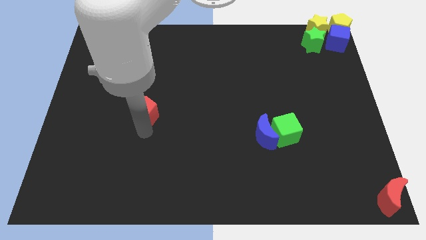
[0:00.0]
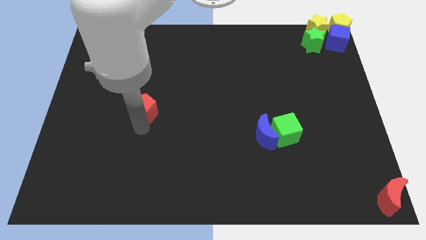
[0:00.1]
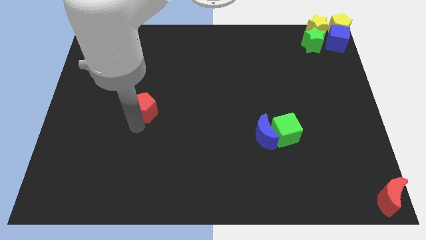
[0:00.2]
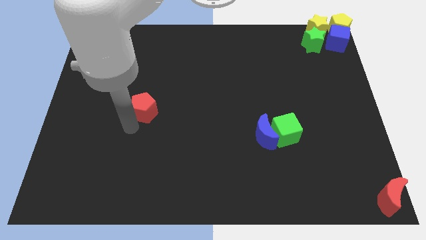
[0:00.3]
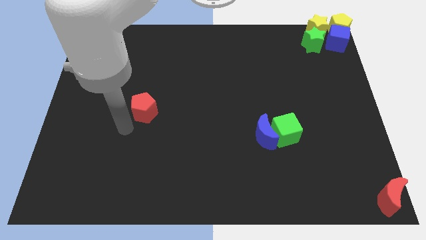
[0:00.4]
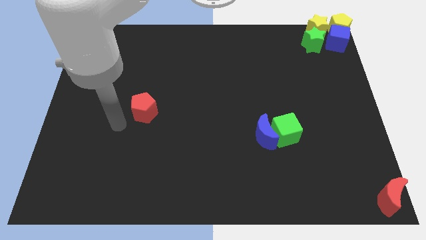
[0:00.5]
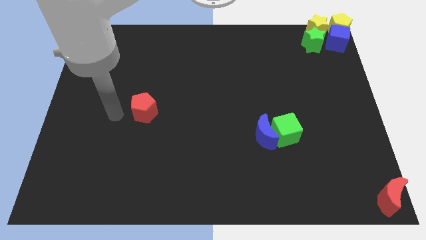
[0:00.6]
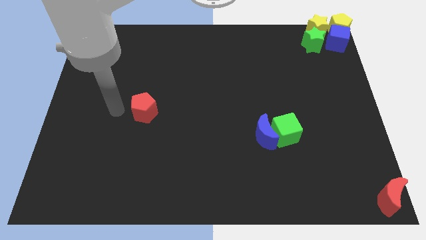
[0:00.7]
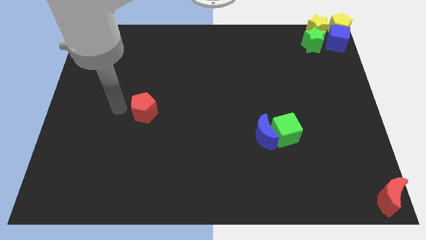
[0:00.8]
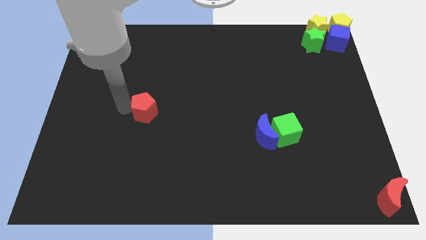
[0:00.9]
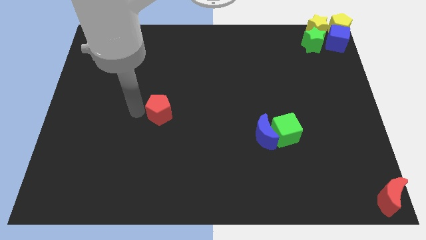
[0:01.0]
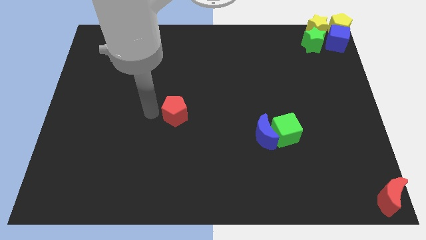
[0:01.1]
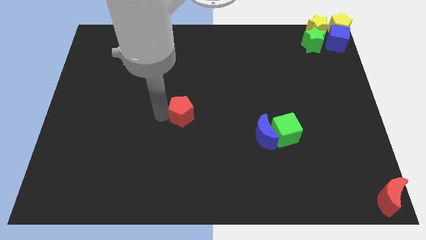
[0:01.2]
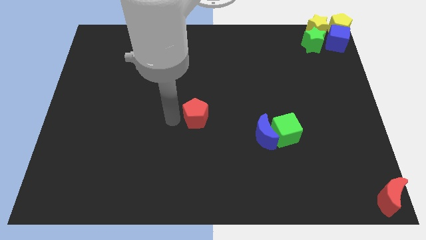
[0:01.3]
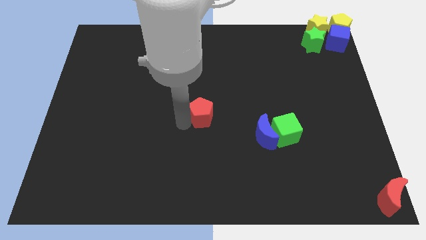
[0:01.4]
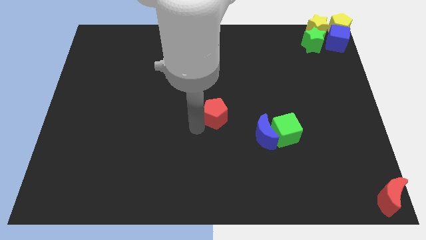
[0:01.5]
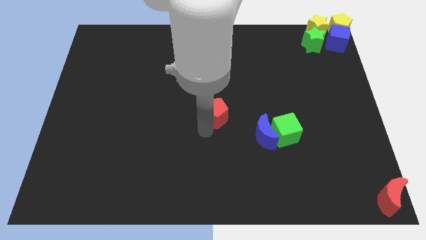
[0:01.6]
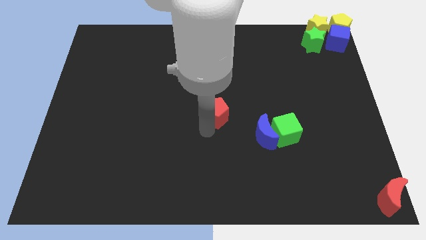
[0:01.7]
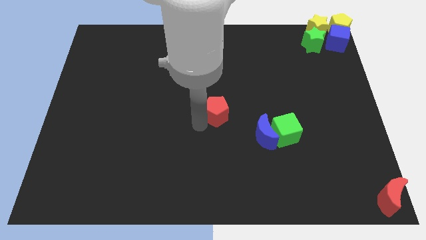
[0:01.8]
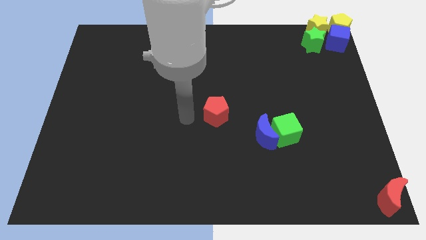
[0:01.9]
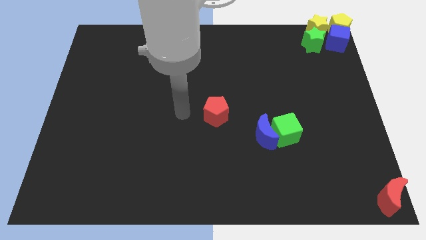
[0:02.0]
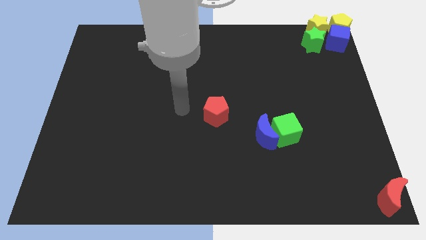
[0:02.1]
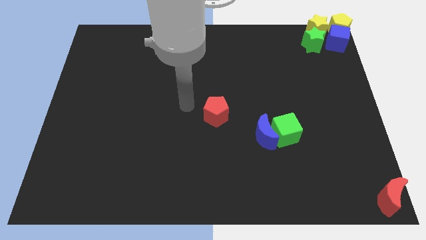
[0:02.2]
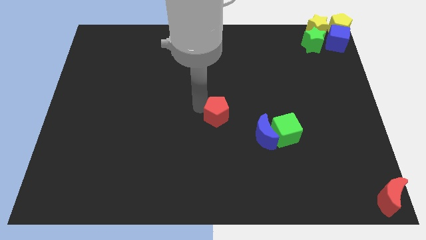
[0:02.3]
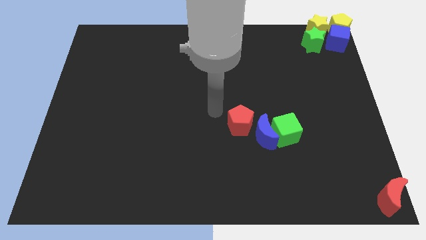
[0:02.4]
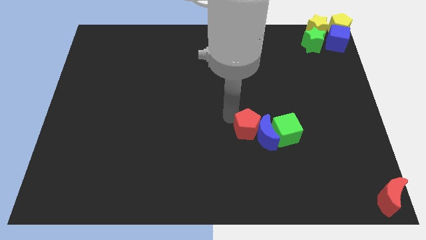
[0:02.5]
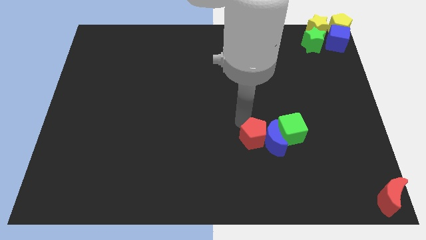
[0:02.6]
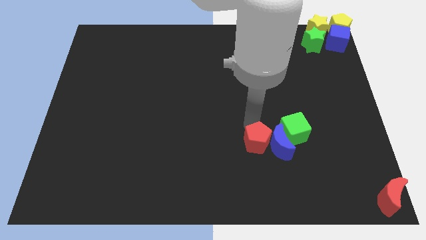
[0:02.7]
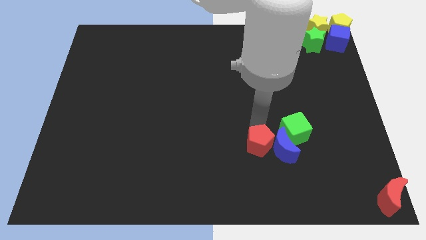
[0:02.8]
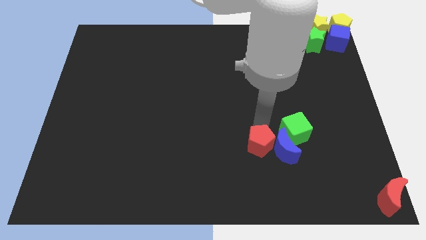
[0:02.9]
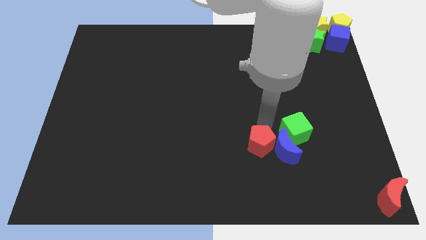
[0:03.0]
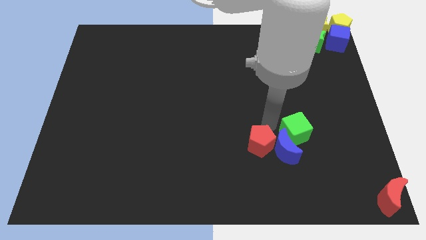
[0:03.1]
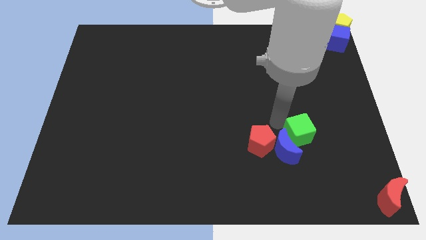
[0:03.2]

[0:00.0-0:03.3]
push red pentagon in to blue moon

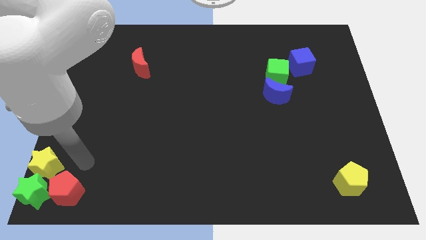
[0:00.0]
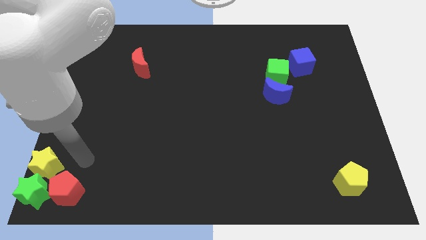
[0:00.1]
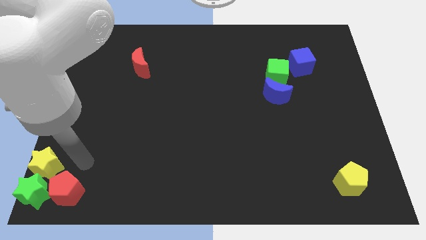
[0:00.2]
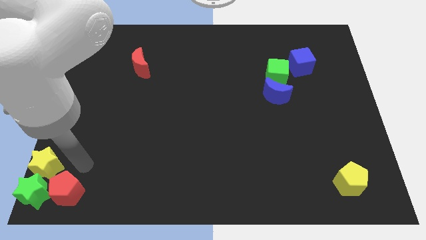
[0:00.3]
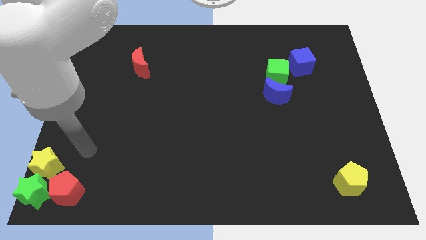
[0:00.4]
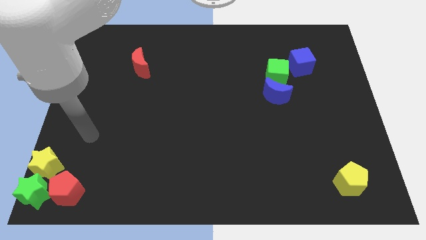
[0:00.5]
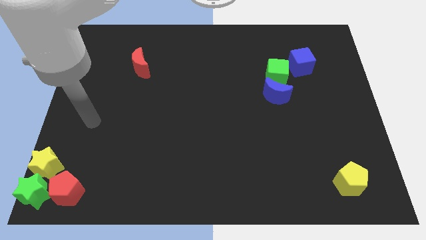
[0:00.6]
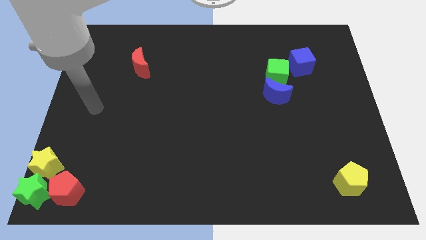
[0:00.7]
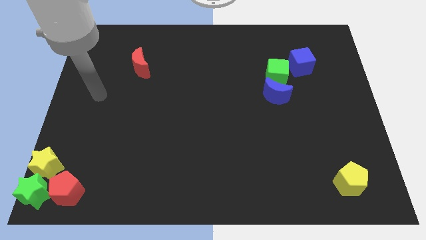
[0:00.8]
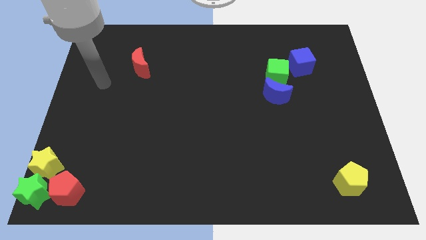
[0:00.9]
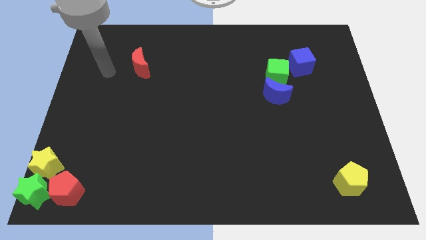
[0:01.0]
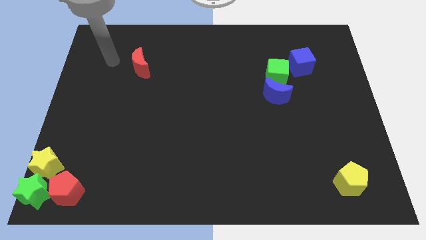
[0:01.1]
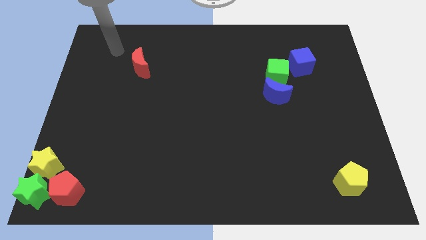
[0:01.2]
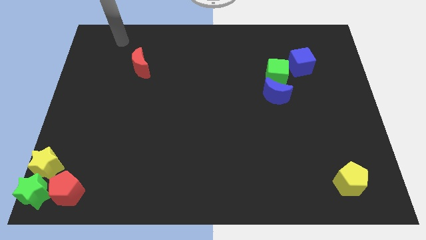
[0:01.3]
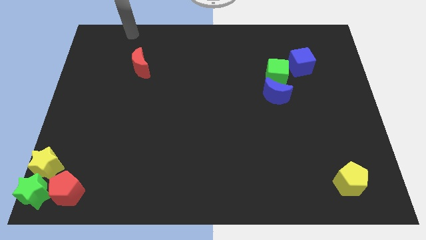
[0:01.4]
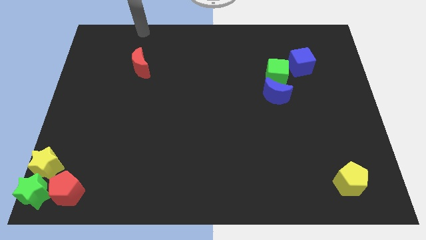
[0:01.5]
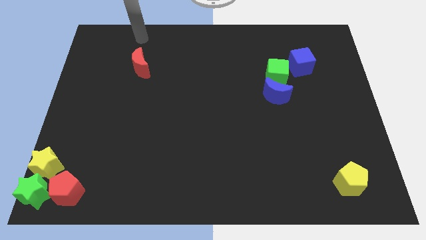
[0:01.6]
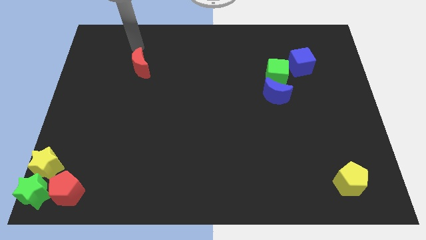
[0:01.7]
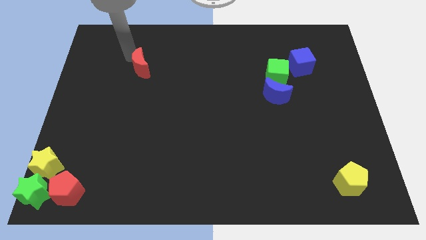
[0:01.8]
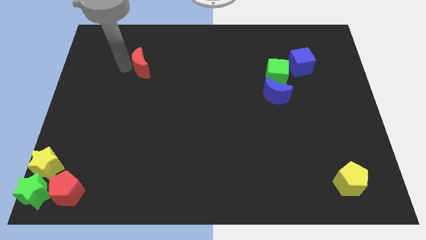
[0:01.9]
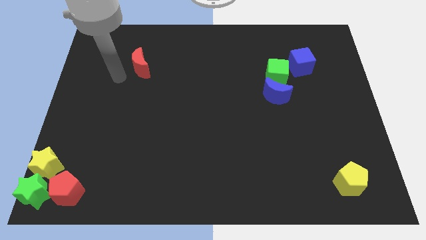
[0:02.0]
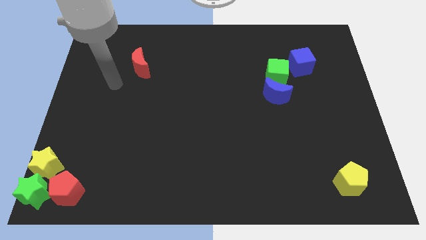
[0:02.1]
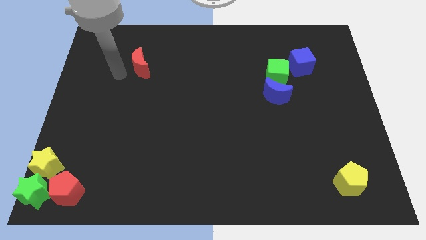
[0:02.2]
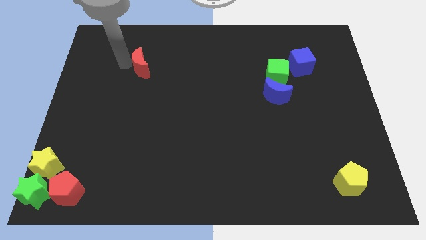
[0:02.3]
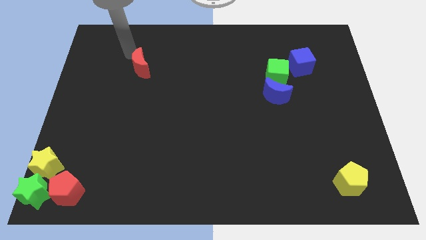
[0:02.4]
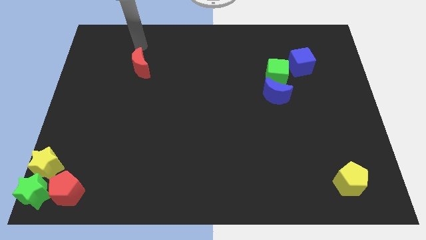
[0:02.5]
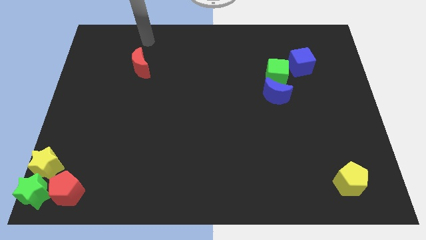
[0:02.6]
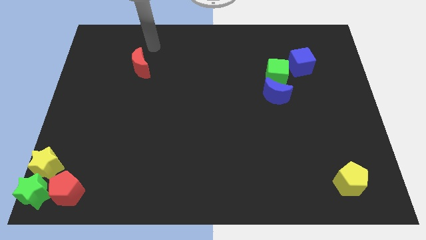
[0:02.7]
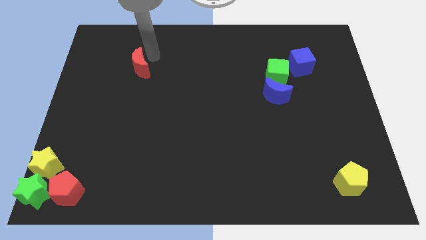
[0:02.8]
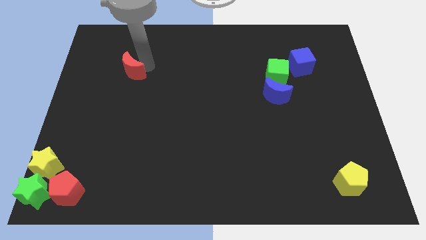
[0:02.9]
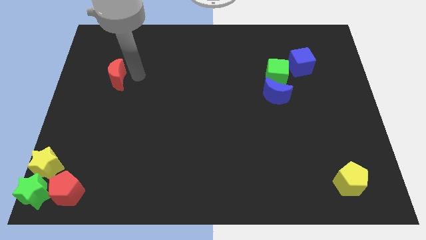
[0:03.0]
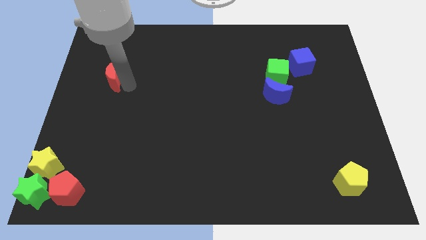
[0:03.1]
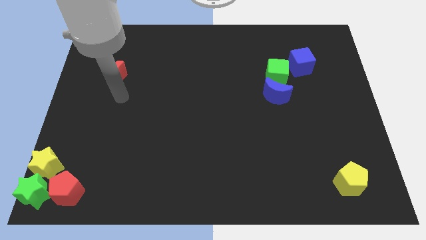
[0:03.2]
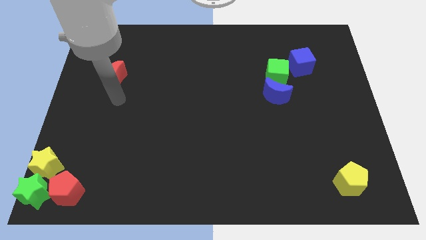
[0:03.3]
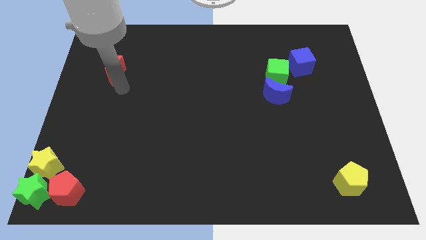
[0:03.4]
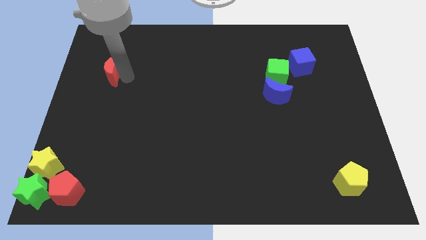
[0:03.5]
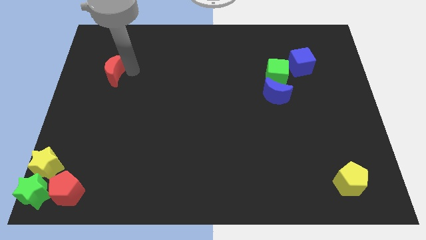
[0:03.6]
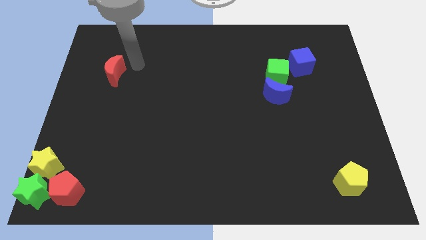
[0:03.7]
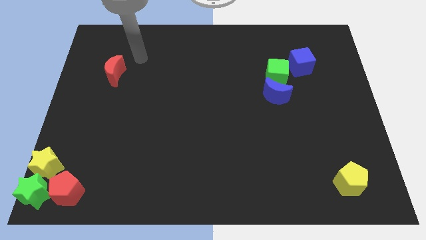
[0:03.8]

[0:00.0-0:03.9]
move the red moon slightly to the left

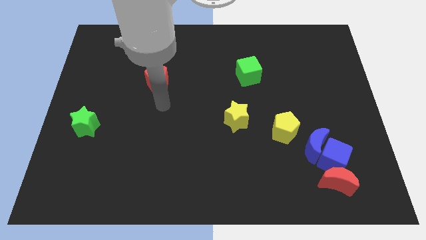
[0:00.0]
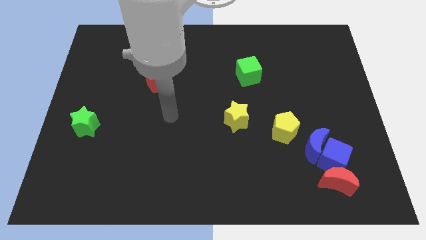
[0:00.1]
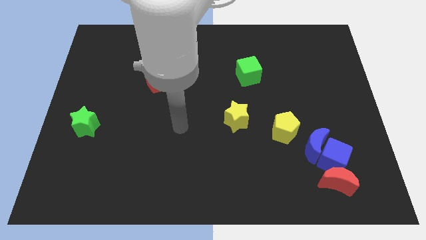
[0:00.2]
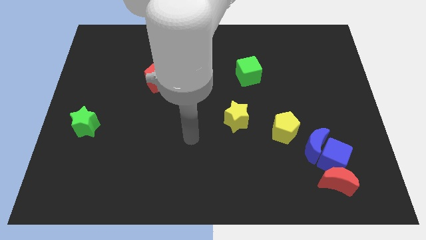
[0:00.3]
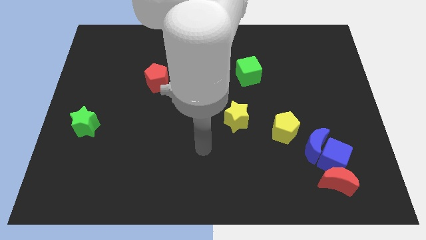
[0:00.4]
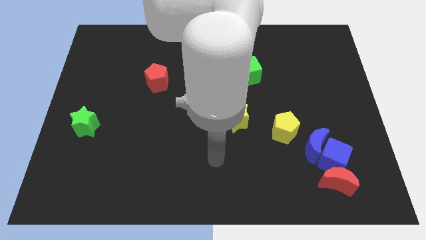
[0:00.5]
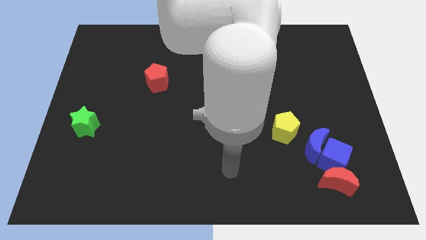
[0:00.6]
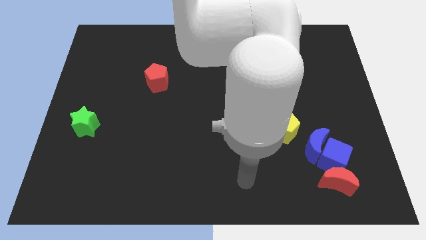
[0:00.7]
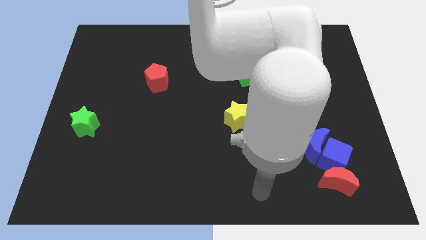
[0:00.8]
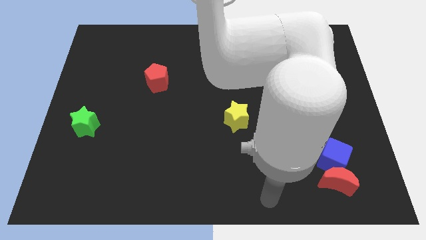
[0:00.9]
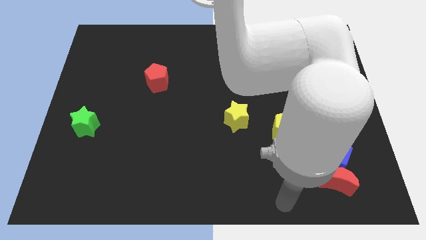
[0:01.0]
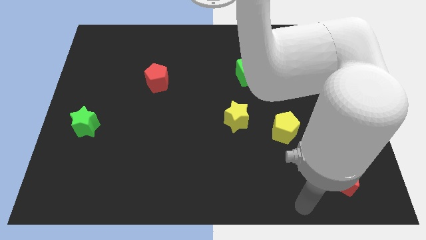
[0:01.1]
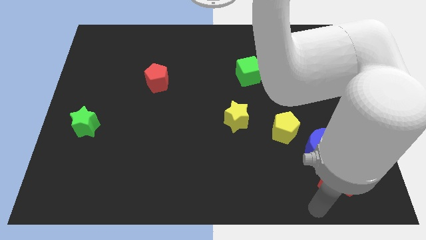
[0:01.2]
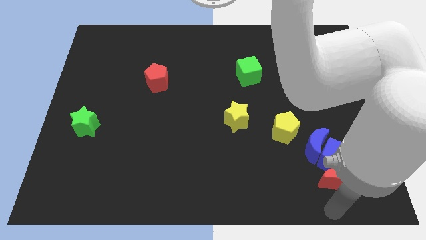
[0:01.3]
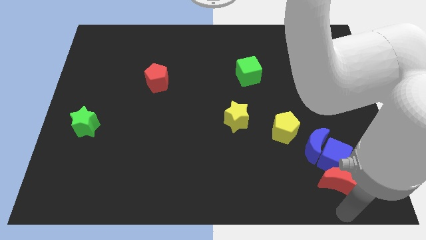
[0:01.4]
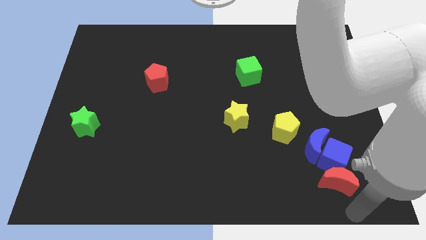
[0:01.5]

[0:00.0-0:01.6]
point your arm at the bottom side of the red crescent

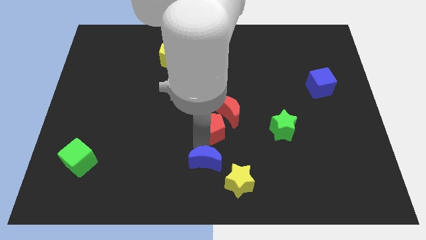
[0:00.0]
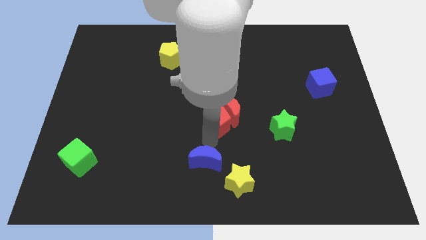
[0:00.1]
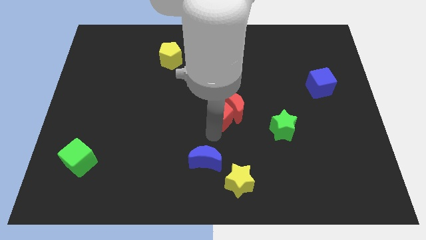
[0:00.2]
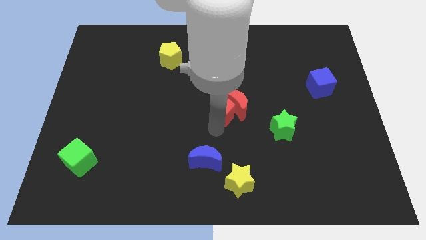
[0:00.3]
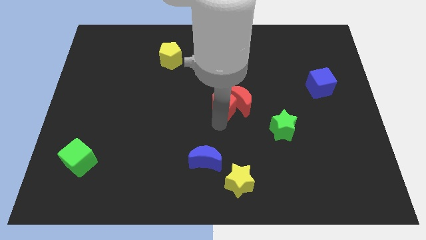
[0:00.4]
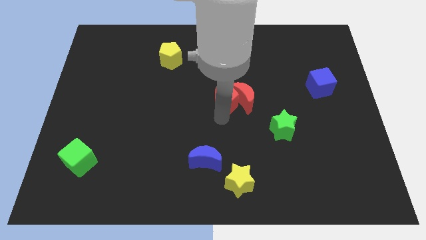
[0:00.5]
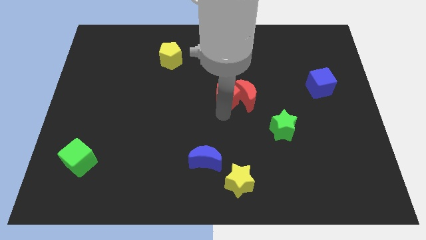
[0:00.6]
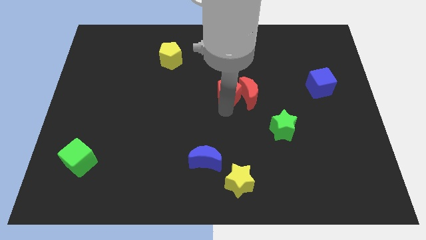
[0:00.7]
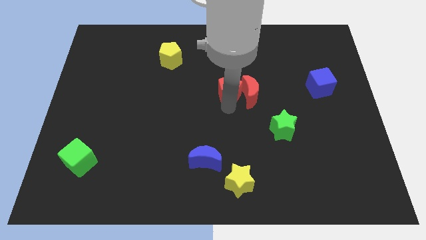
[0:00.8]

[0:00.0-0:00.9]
push the red pentagon into the red crescent
